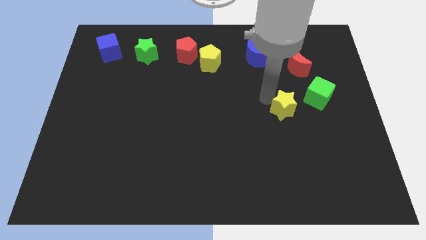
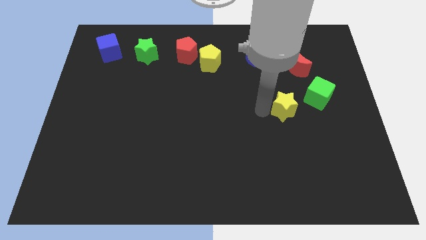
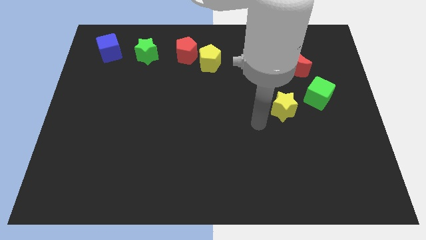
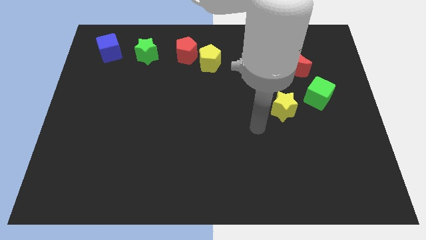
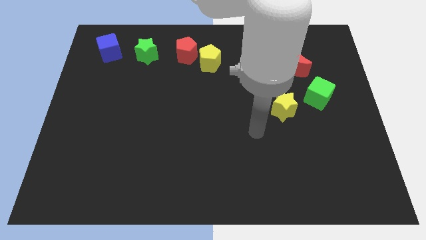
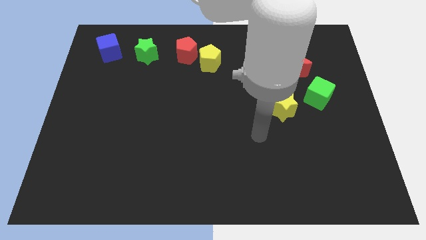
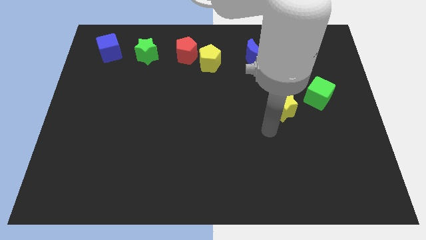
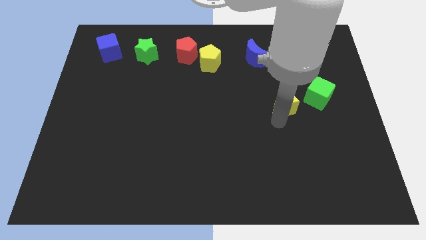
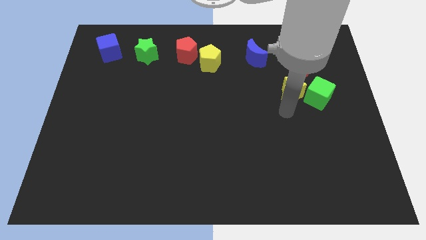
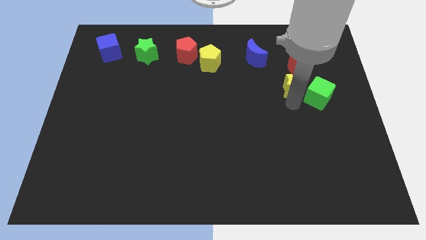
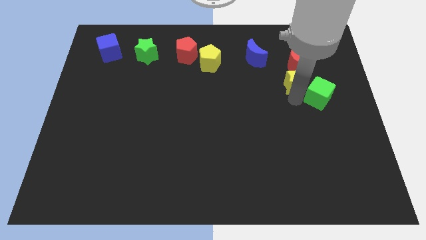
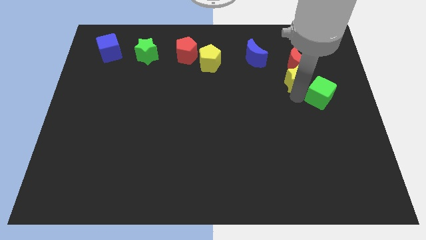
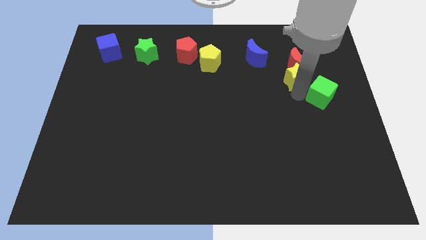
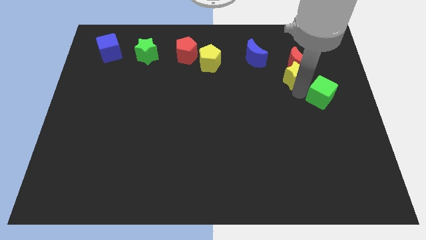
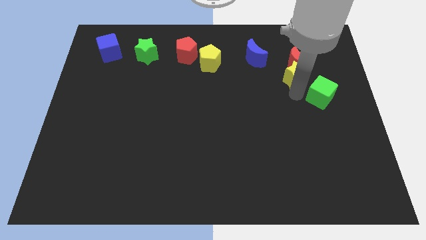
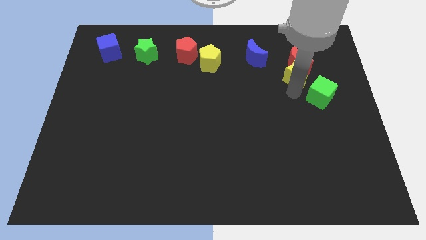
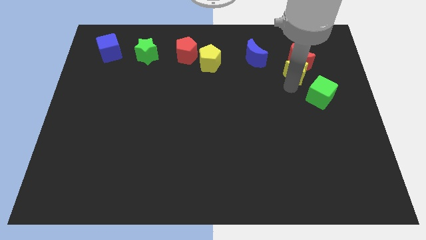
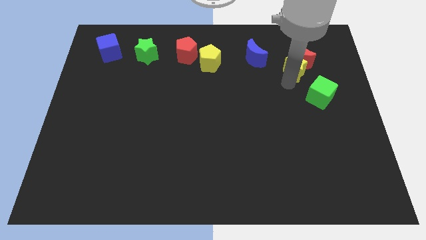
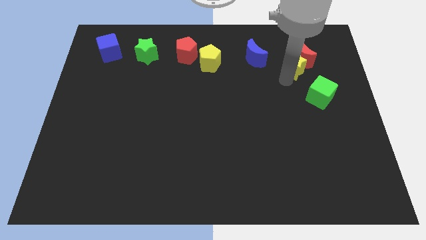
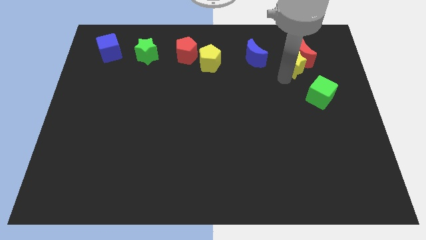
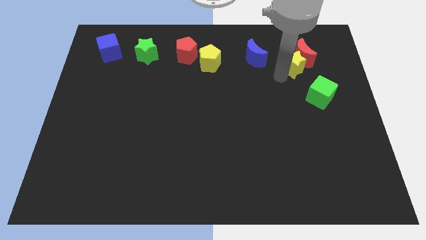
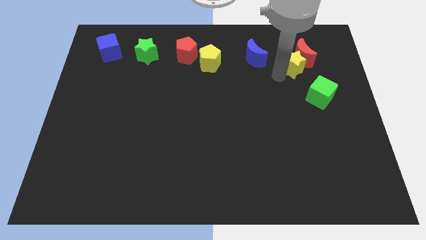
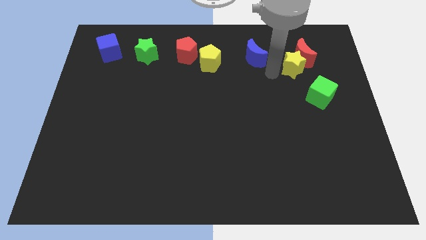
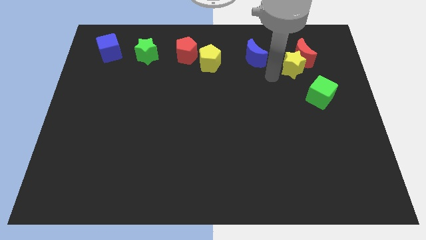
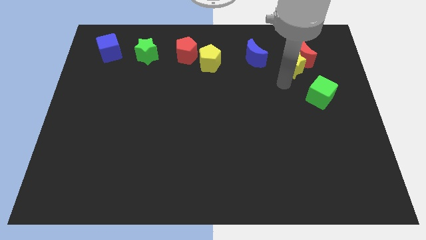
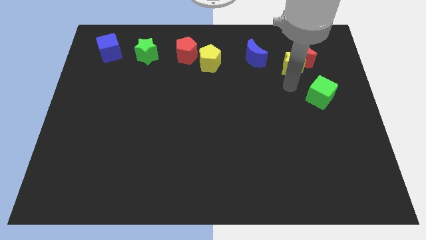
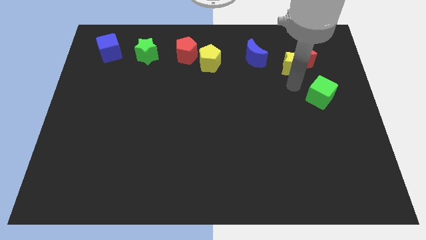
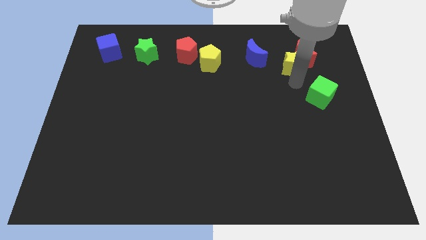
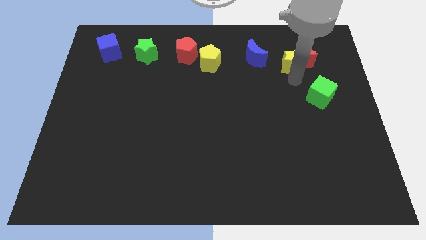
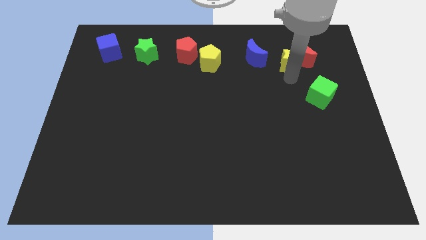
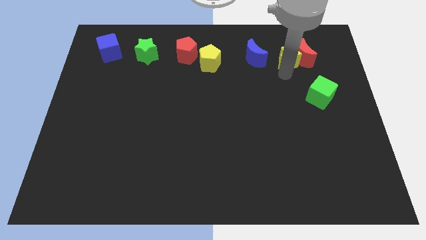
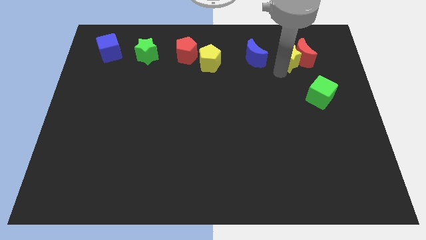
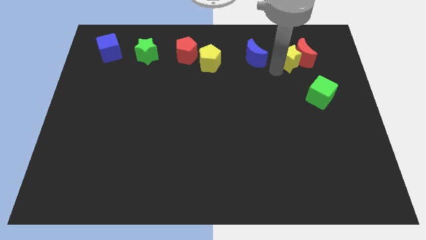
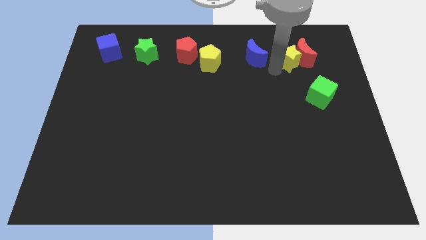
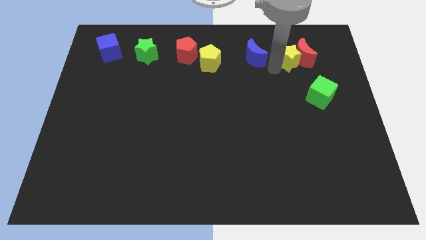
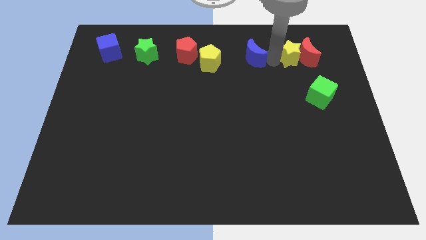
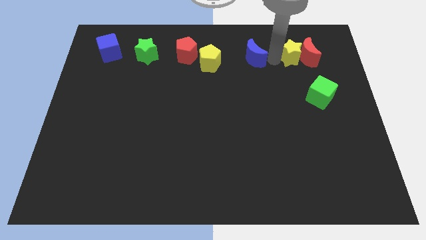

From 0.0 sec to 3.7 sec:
push the yellow star and red moon to the top right

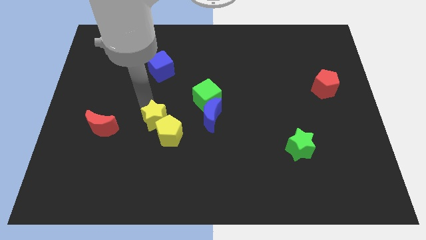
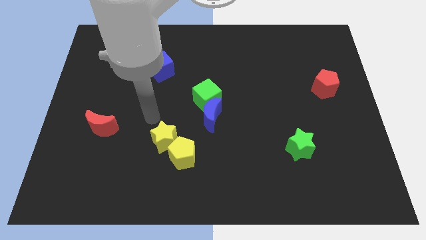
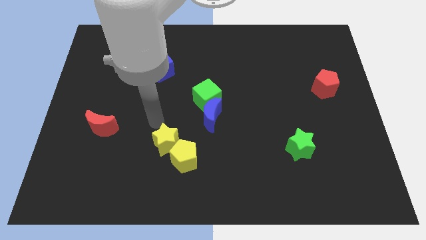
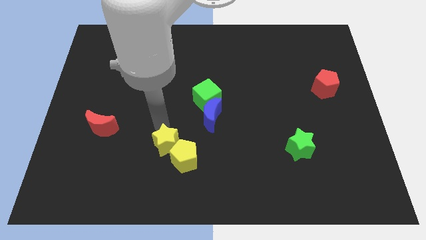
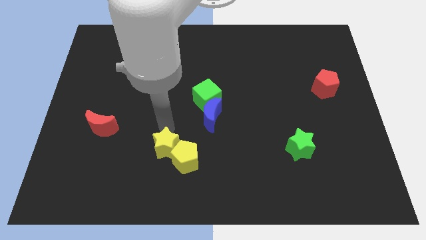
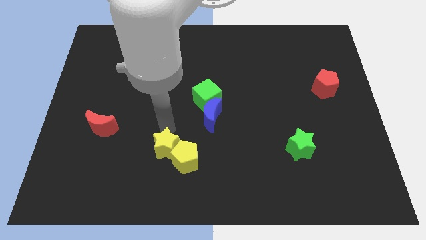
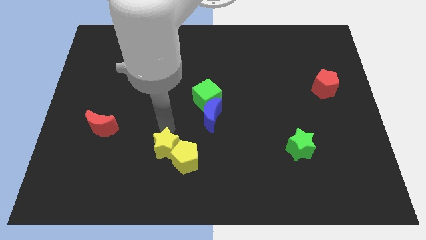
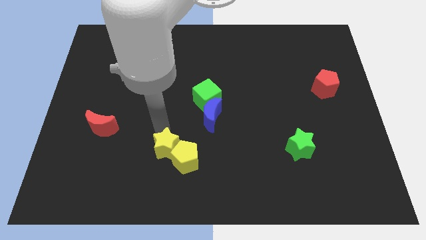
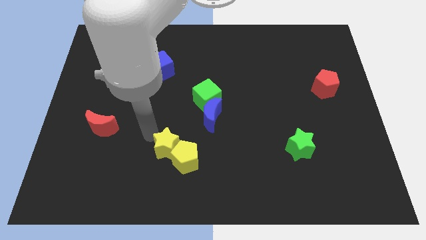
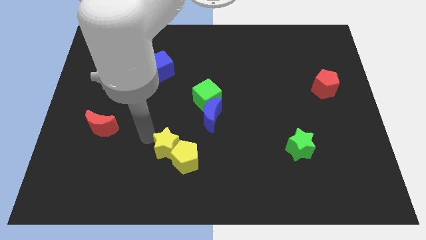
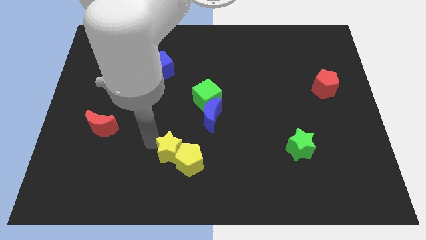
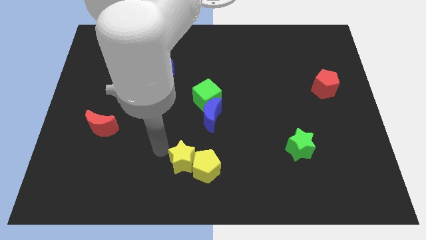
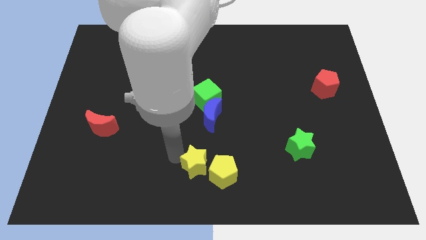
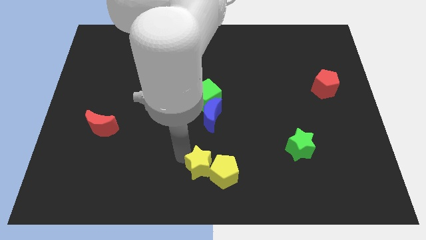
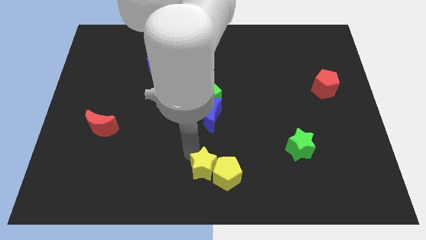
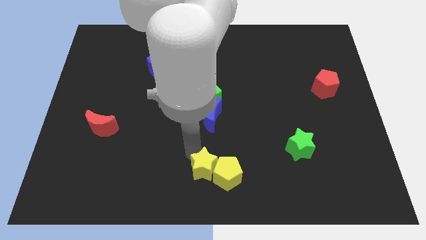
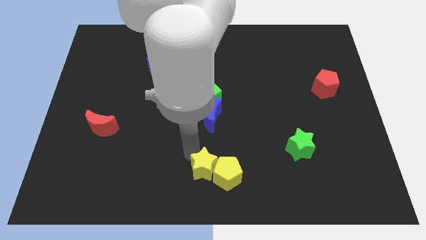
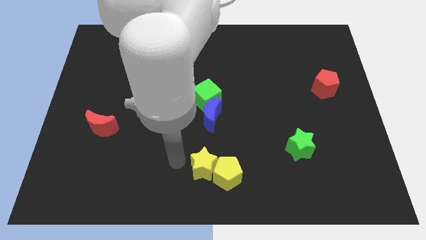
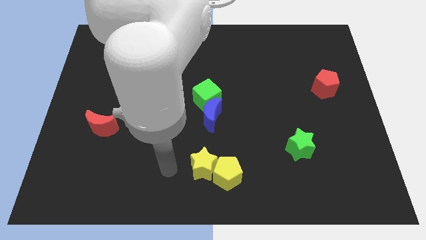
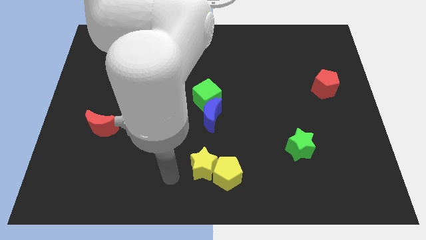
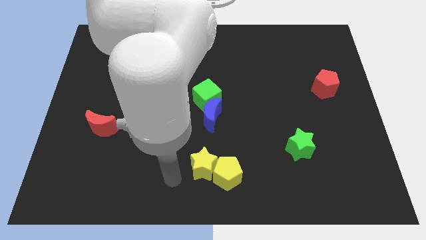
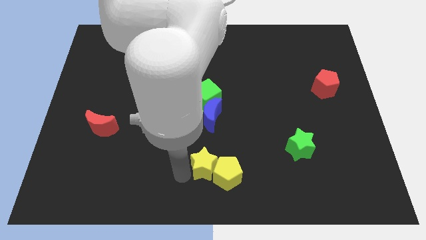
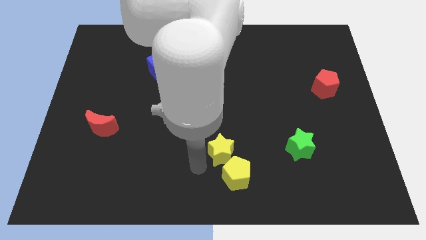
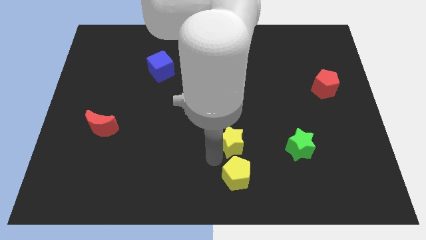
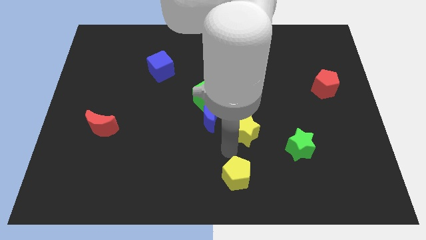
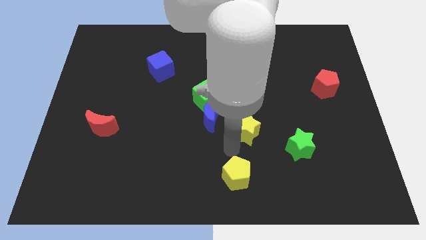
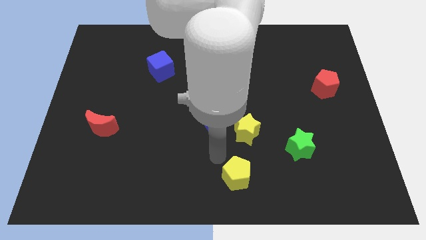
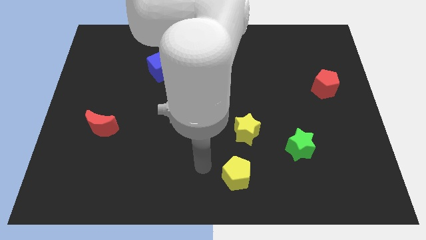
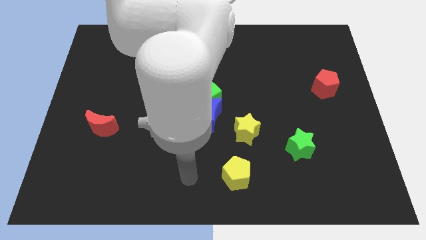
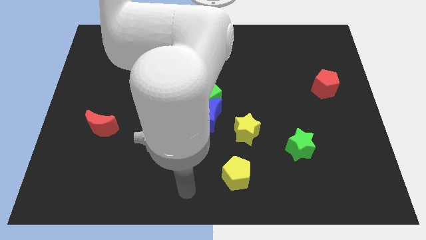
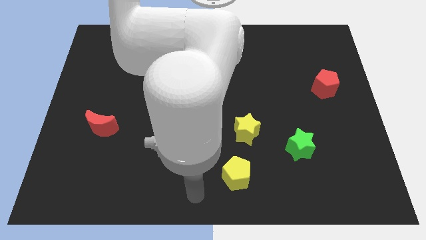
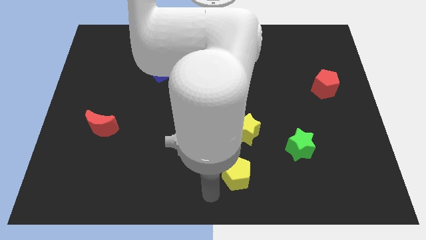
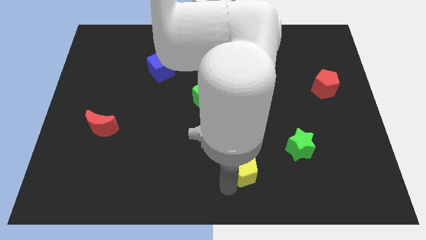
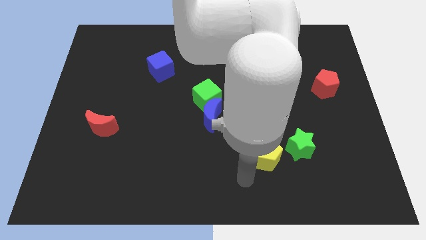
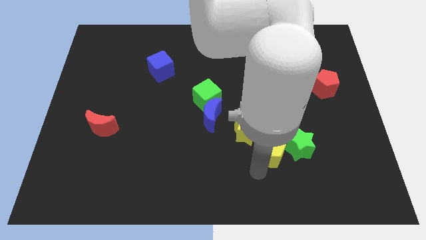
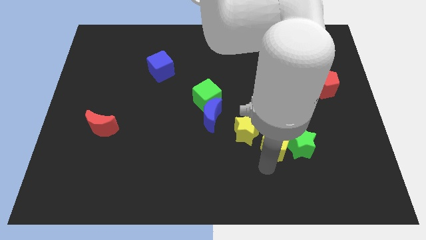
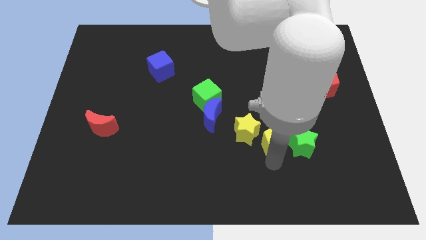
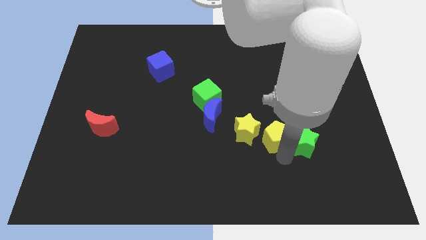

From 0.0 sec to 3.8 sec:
bring the yellow objects at the left side of the green star

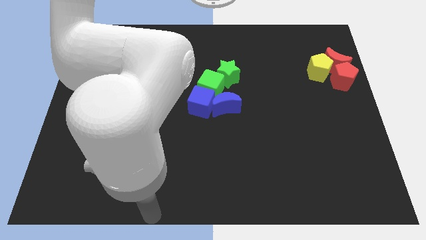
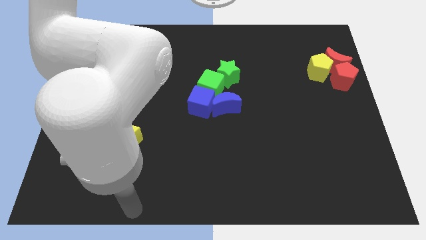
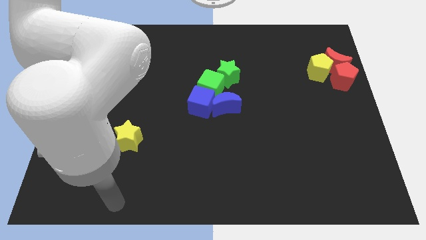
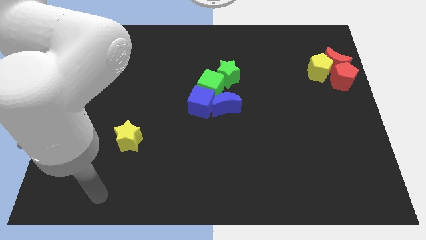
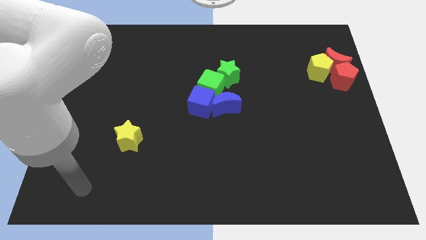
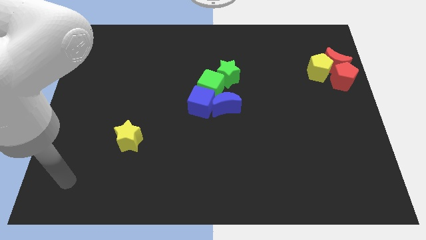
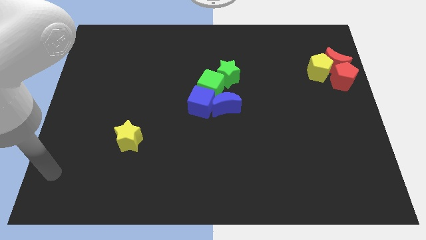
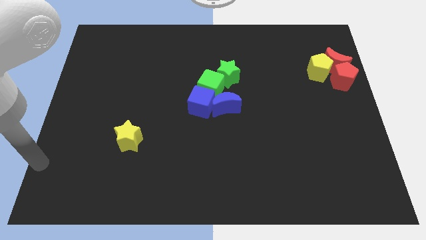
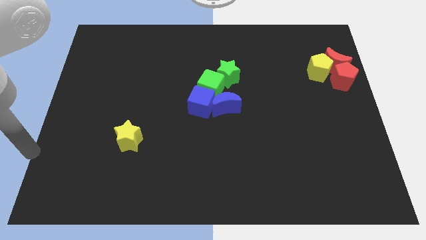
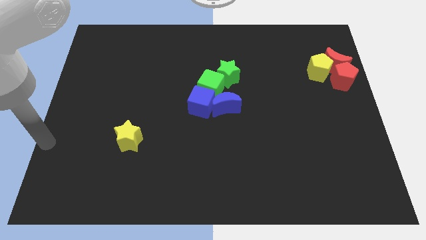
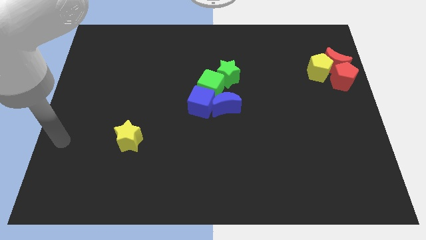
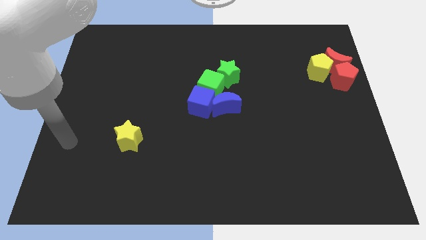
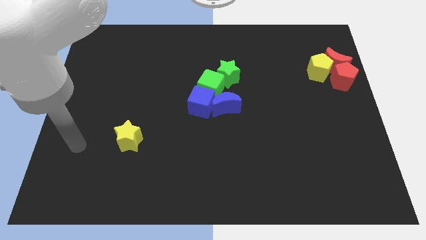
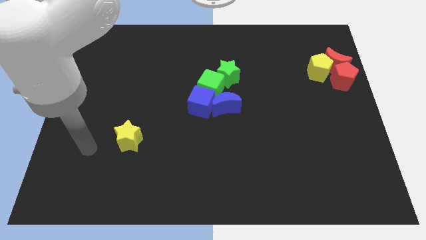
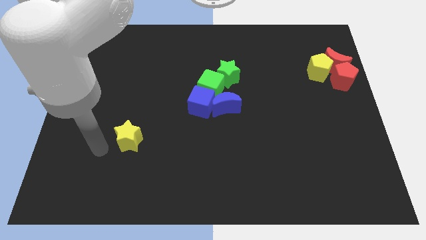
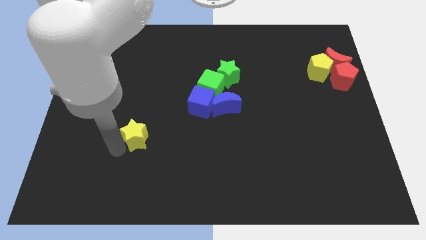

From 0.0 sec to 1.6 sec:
move your hand to the bottom left of the yellow star
